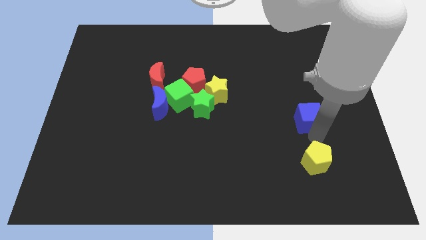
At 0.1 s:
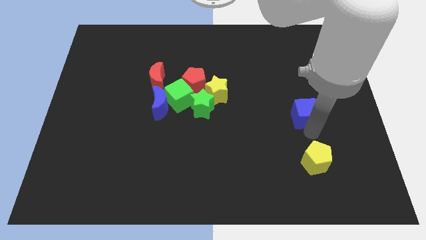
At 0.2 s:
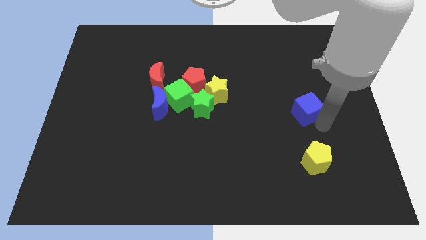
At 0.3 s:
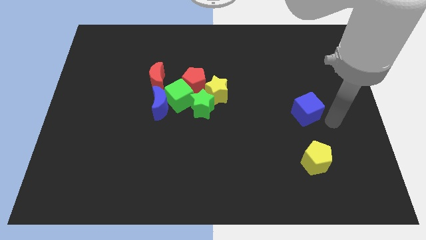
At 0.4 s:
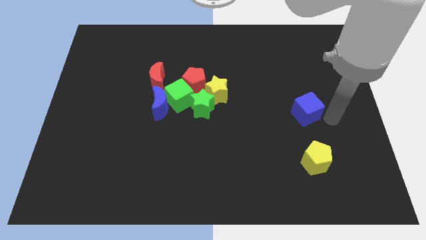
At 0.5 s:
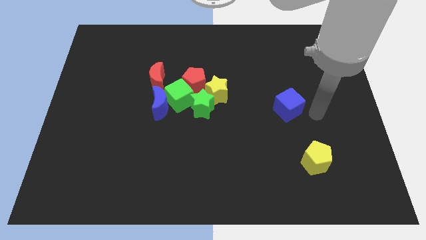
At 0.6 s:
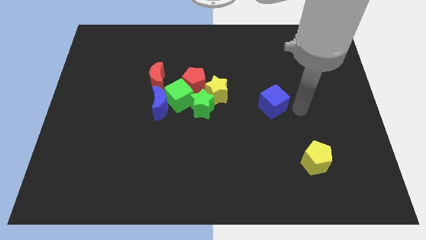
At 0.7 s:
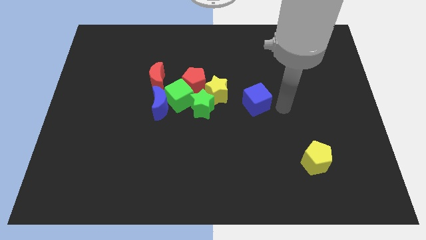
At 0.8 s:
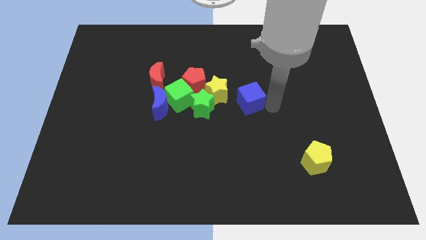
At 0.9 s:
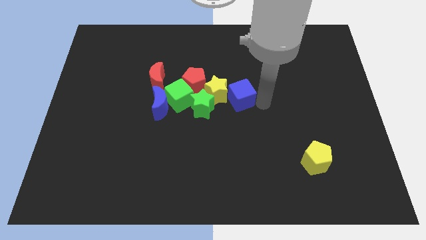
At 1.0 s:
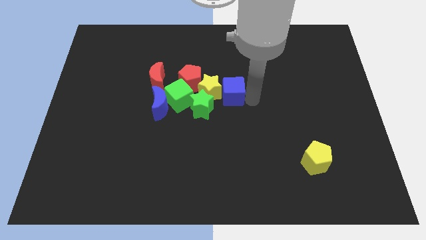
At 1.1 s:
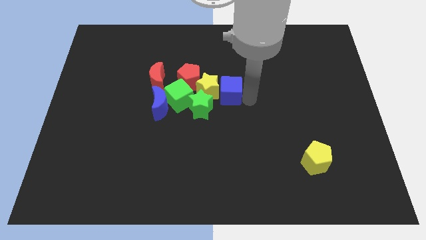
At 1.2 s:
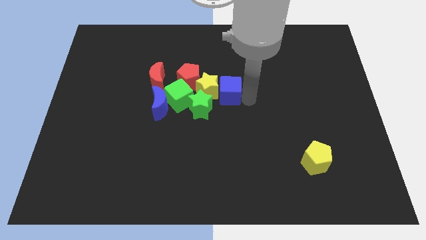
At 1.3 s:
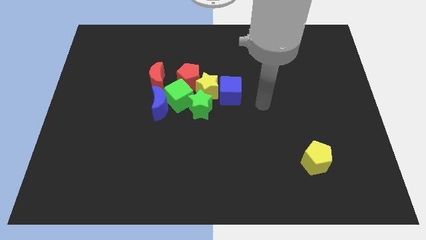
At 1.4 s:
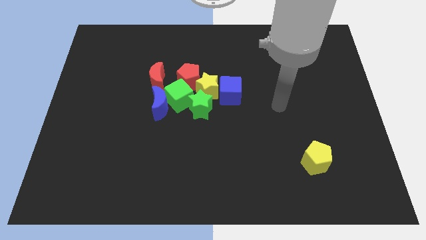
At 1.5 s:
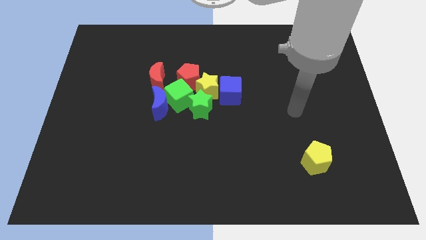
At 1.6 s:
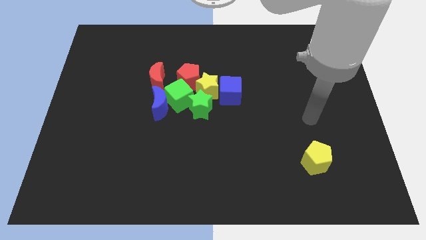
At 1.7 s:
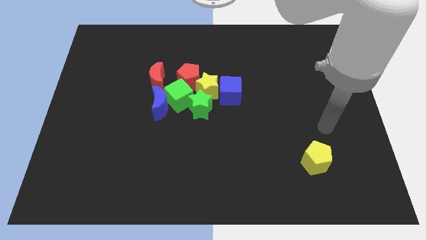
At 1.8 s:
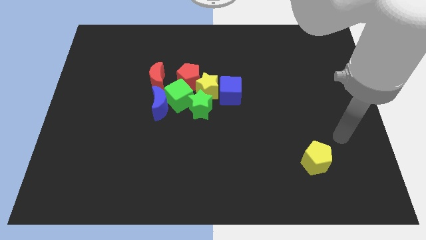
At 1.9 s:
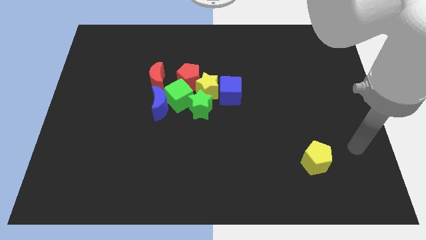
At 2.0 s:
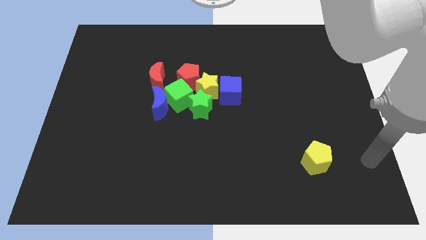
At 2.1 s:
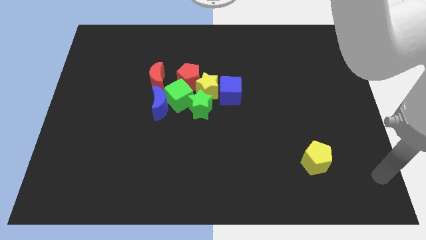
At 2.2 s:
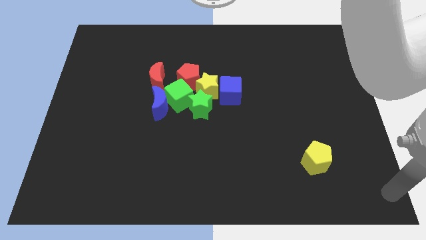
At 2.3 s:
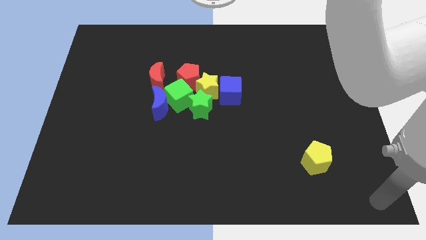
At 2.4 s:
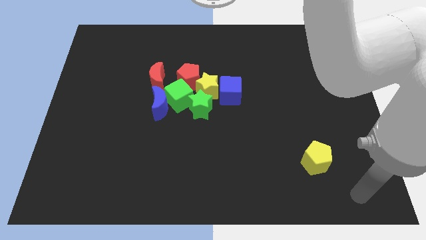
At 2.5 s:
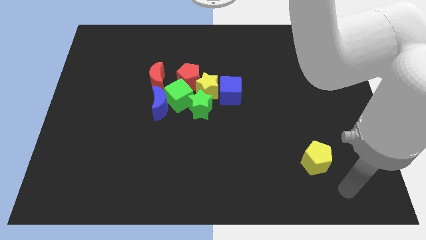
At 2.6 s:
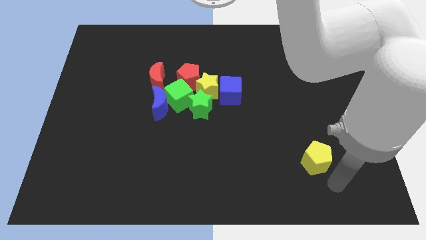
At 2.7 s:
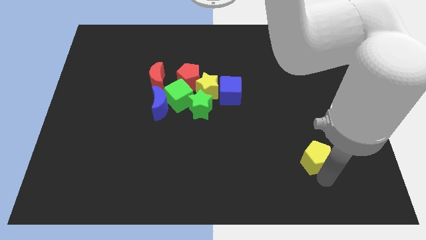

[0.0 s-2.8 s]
move the blue cube to the right side of yellow star

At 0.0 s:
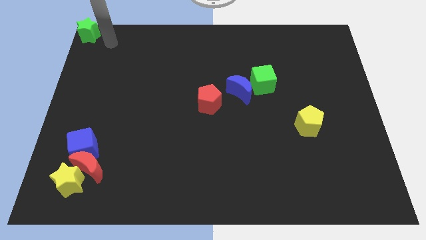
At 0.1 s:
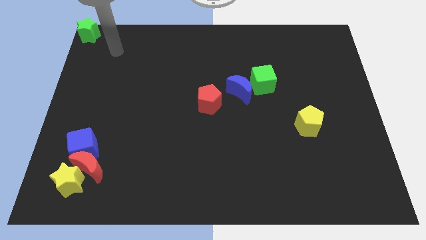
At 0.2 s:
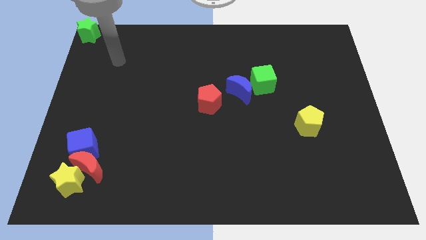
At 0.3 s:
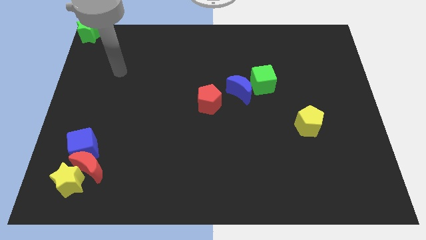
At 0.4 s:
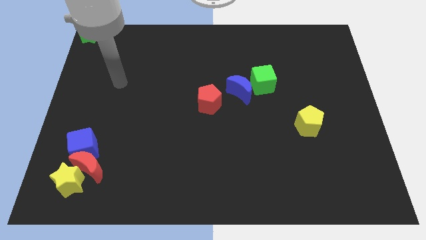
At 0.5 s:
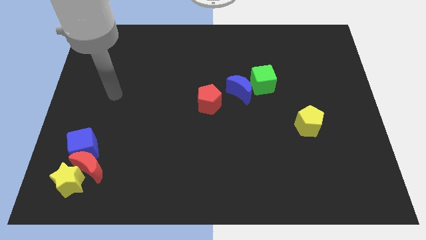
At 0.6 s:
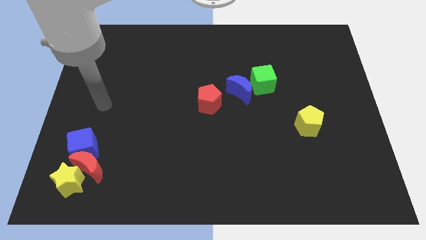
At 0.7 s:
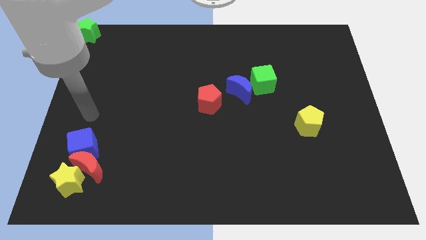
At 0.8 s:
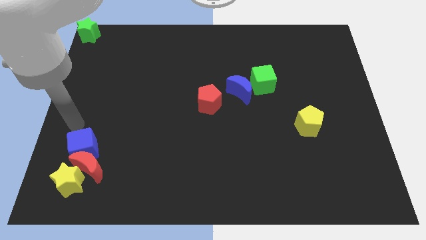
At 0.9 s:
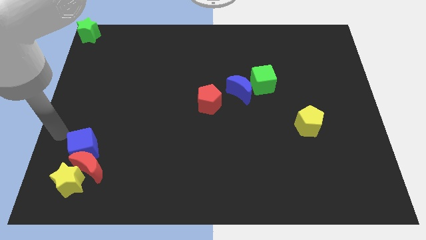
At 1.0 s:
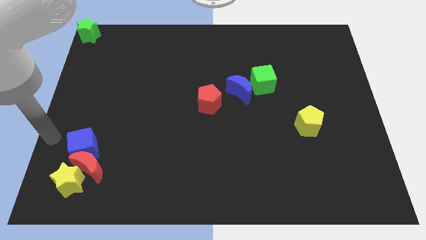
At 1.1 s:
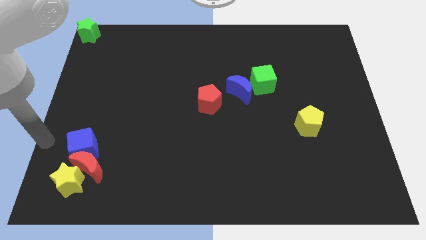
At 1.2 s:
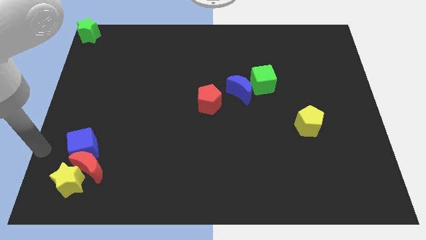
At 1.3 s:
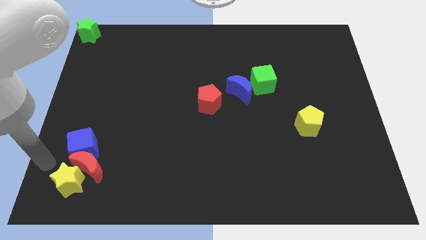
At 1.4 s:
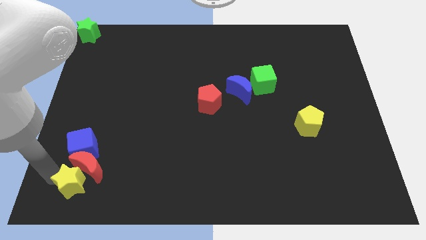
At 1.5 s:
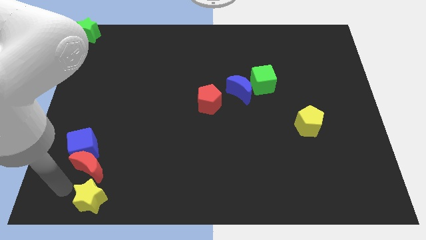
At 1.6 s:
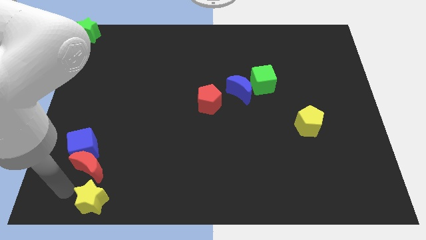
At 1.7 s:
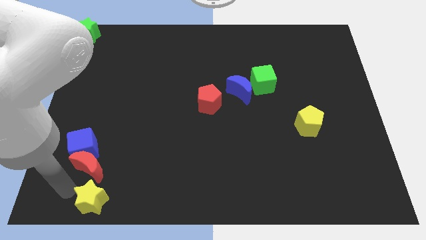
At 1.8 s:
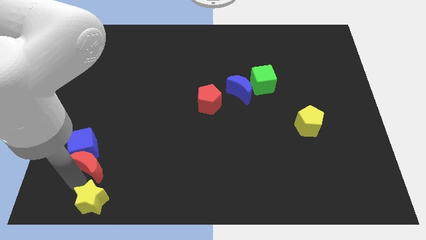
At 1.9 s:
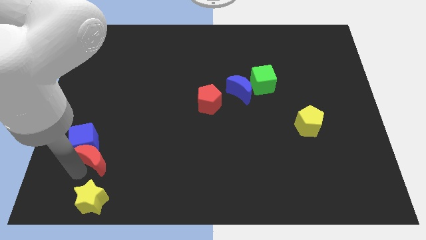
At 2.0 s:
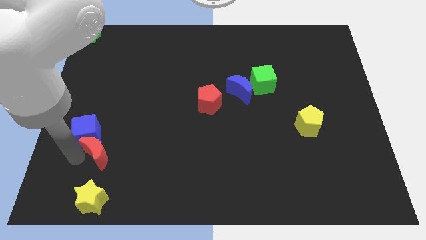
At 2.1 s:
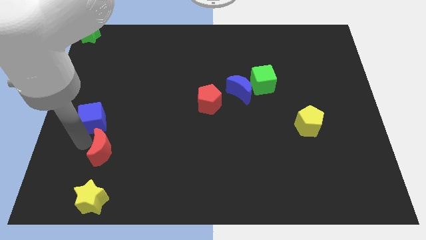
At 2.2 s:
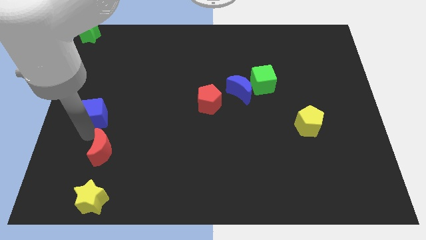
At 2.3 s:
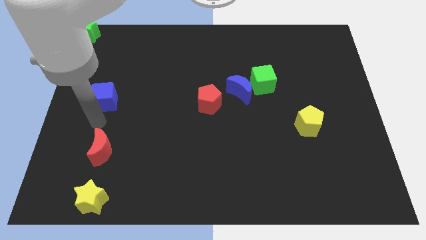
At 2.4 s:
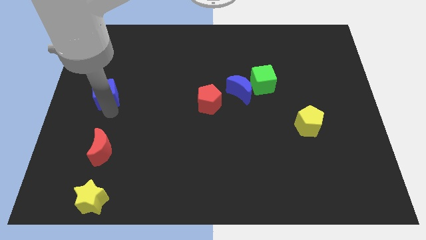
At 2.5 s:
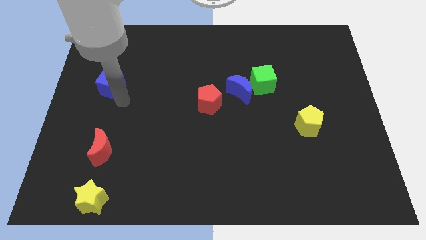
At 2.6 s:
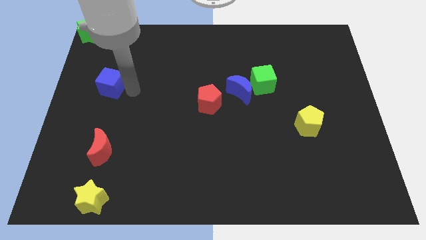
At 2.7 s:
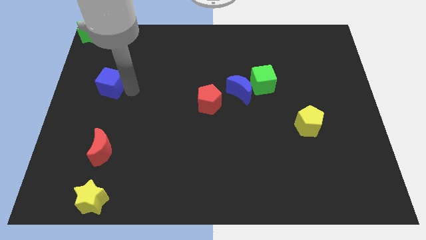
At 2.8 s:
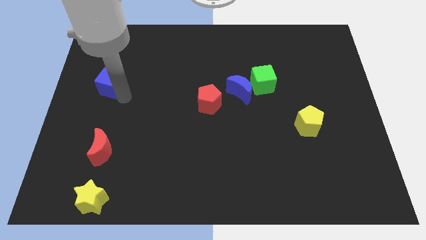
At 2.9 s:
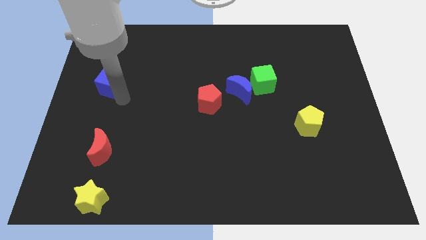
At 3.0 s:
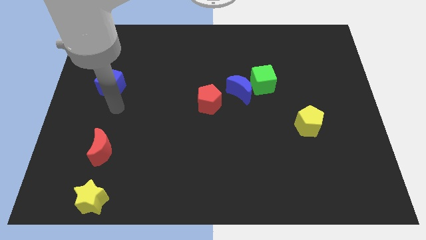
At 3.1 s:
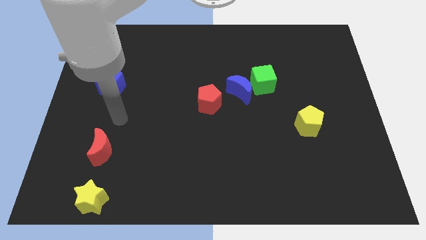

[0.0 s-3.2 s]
place the blue cube below the green star

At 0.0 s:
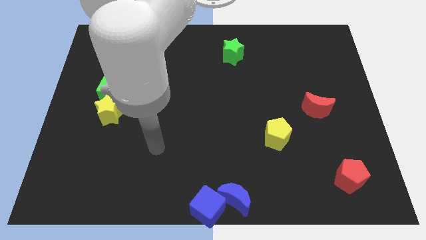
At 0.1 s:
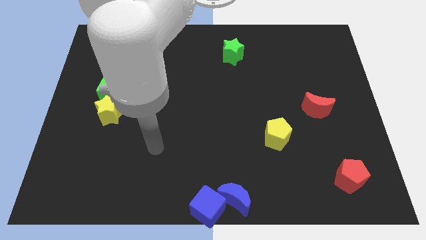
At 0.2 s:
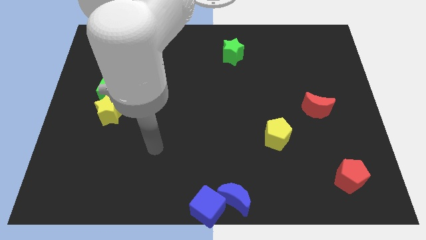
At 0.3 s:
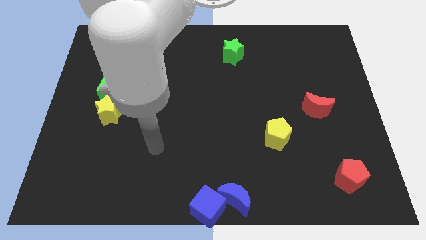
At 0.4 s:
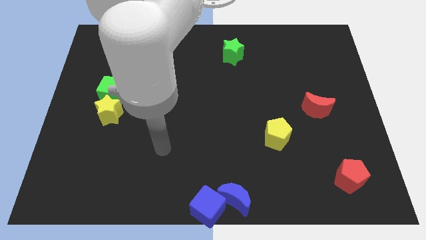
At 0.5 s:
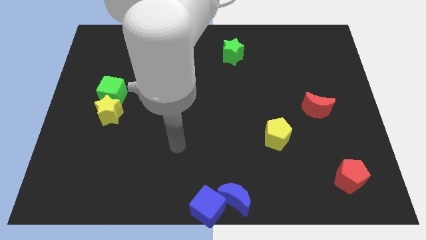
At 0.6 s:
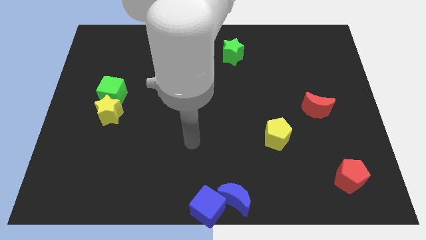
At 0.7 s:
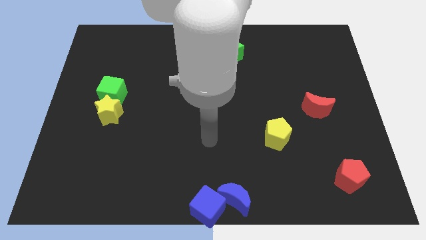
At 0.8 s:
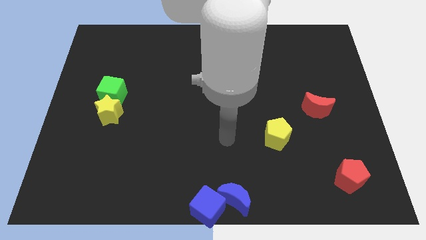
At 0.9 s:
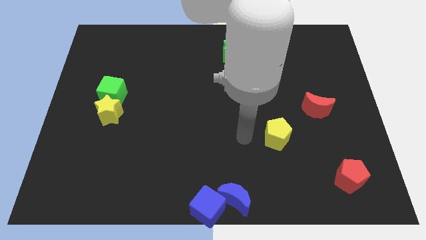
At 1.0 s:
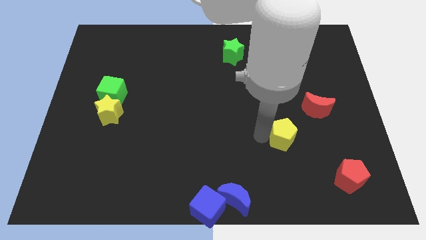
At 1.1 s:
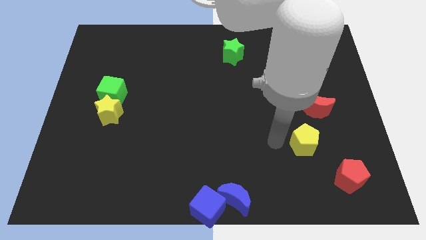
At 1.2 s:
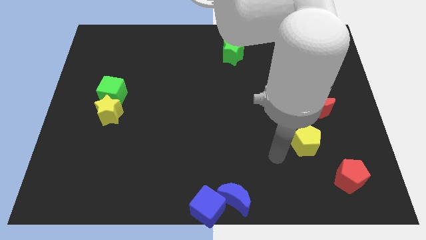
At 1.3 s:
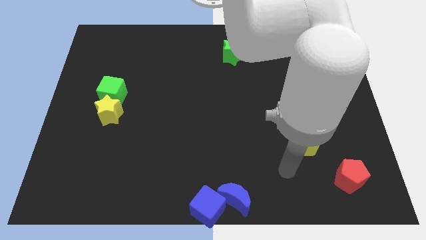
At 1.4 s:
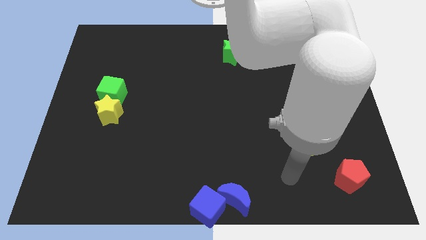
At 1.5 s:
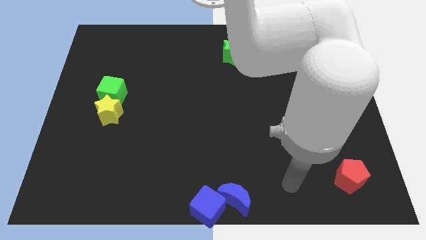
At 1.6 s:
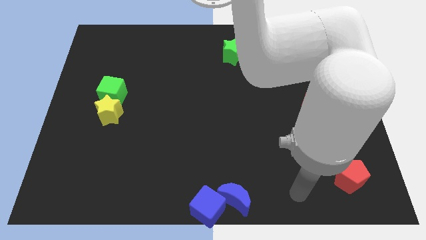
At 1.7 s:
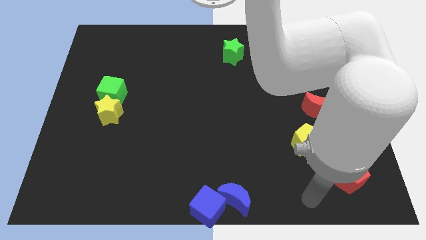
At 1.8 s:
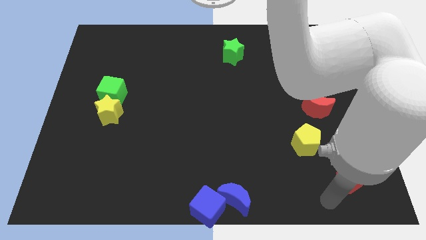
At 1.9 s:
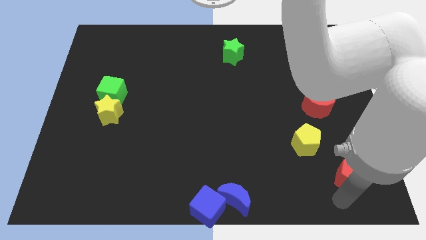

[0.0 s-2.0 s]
slightly push the yellow pentagon to the right

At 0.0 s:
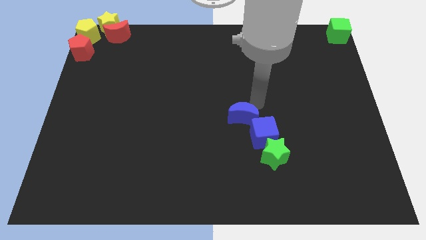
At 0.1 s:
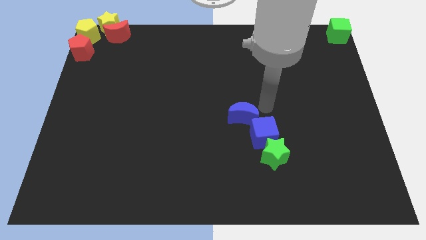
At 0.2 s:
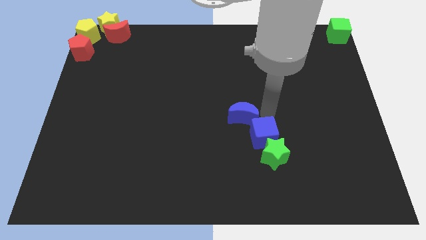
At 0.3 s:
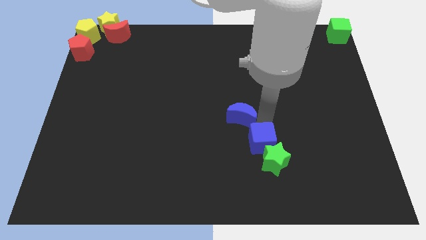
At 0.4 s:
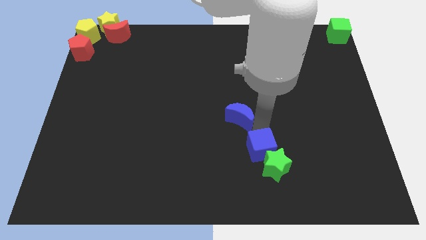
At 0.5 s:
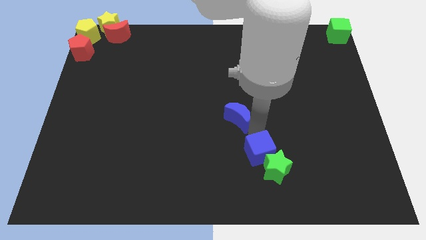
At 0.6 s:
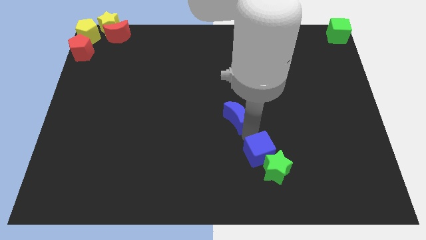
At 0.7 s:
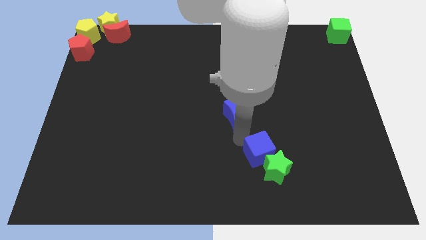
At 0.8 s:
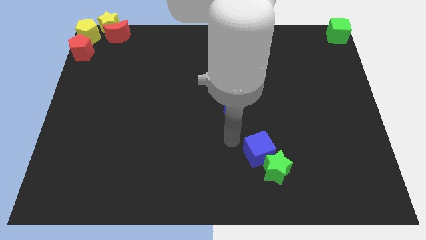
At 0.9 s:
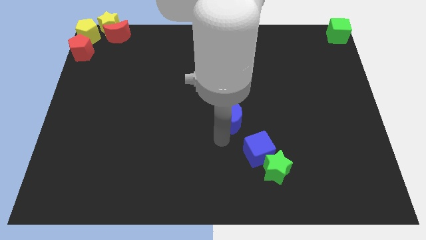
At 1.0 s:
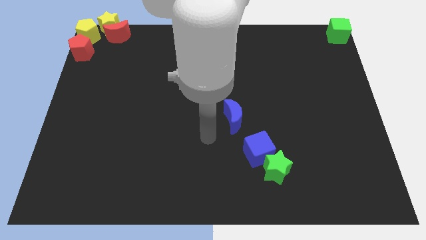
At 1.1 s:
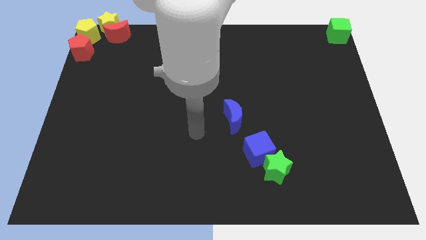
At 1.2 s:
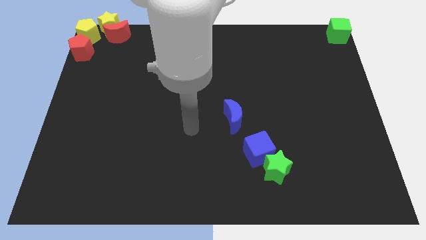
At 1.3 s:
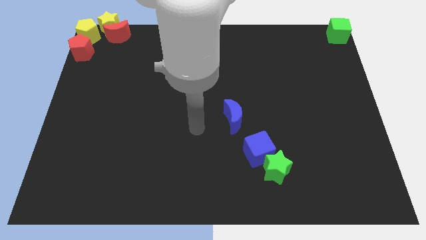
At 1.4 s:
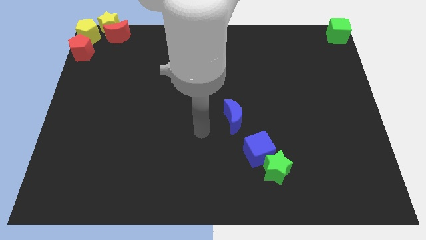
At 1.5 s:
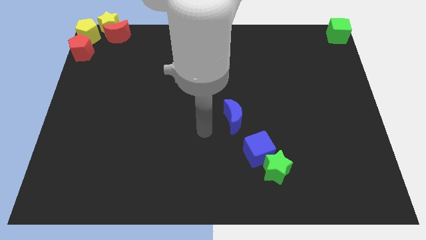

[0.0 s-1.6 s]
separate the blue moon and blue cube
